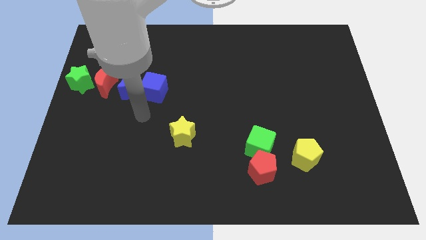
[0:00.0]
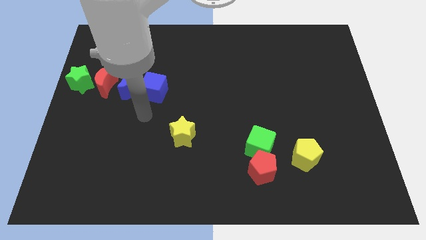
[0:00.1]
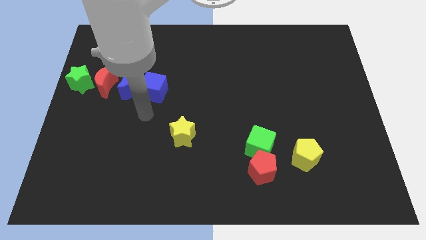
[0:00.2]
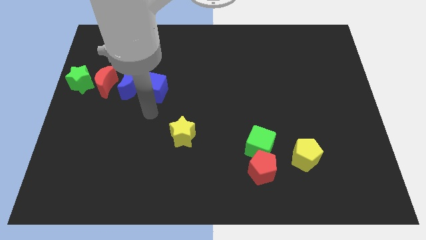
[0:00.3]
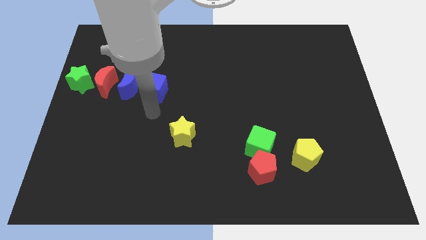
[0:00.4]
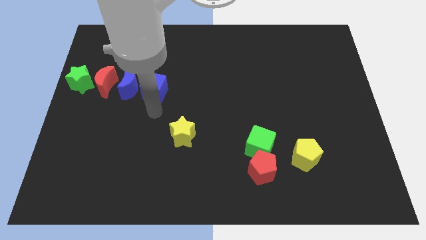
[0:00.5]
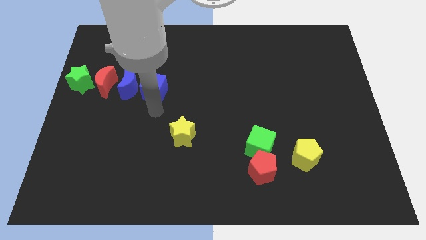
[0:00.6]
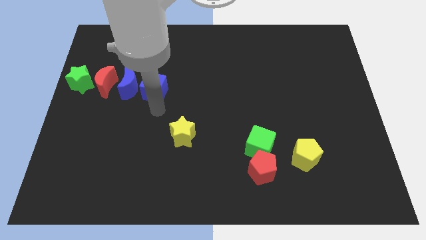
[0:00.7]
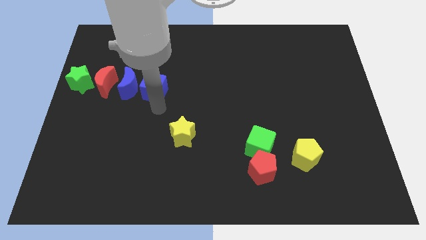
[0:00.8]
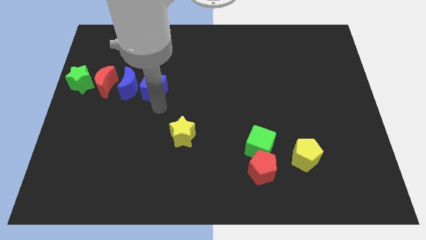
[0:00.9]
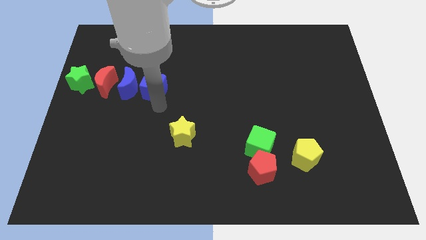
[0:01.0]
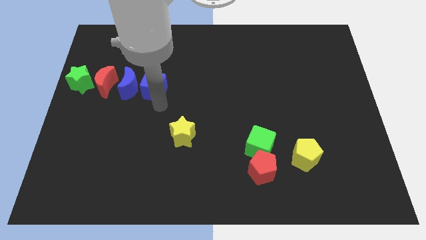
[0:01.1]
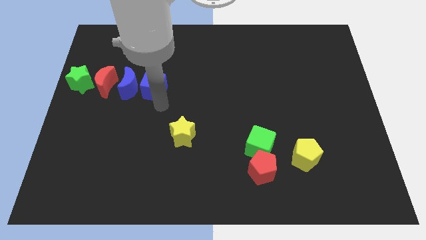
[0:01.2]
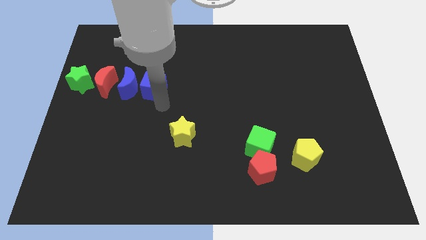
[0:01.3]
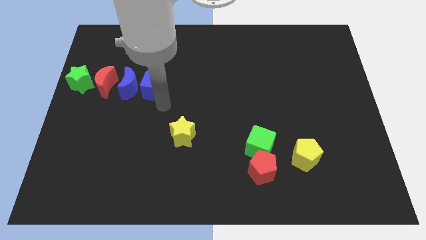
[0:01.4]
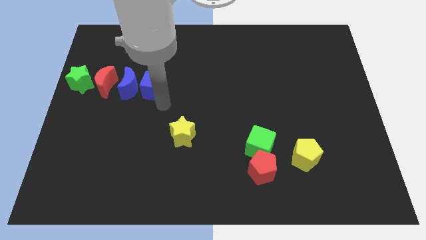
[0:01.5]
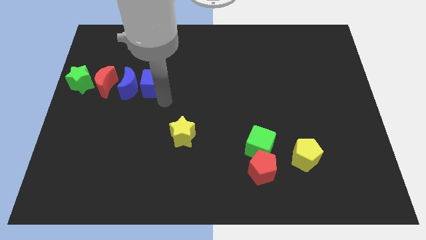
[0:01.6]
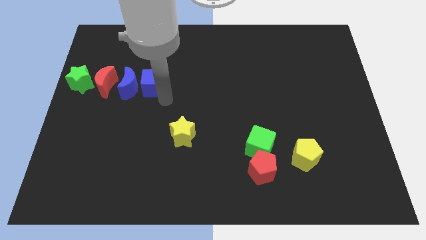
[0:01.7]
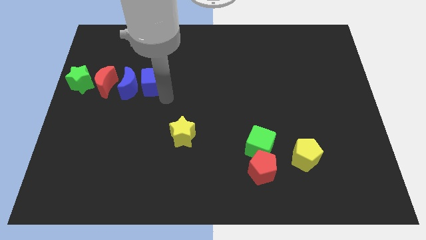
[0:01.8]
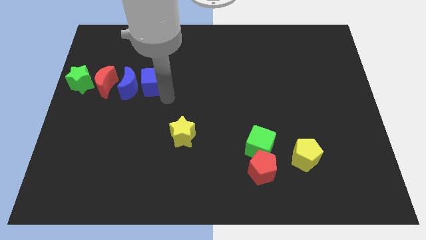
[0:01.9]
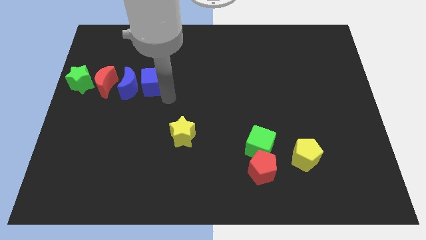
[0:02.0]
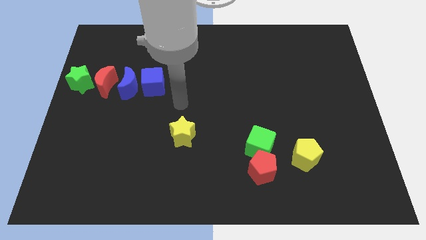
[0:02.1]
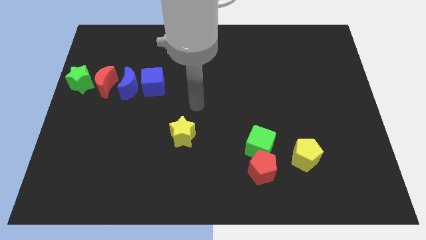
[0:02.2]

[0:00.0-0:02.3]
push the blue moon upwards slightly

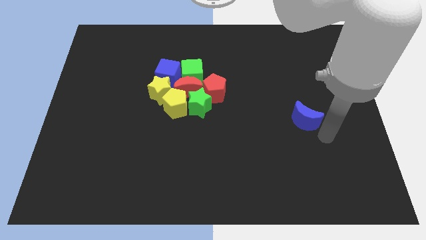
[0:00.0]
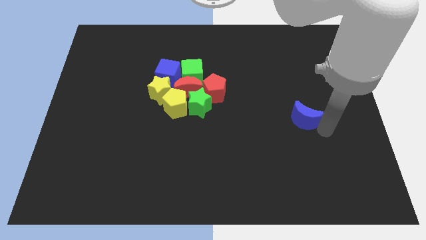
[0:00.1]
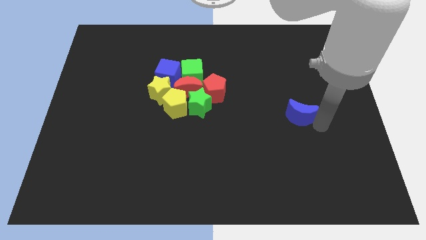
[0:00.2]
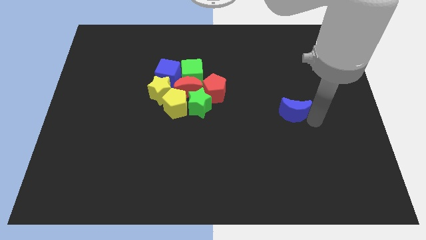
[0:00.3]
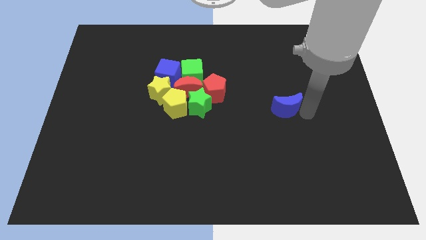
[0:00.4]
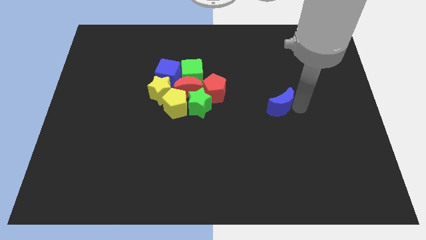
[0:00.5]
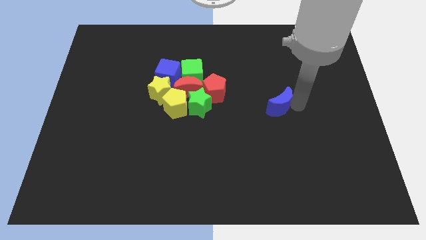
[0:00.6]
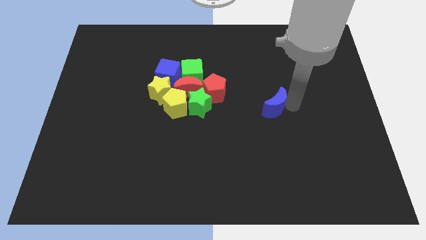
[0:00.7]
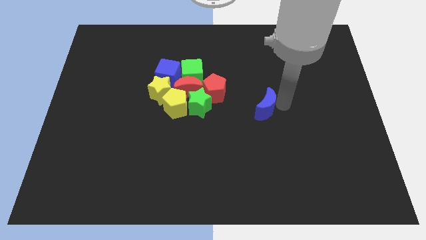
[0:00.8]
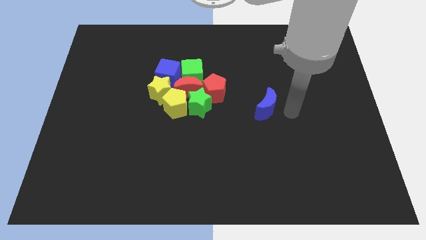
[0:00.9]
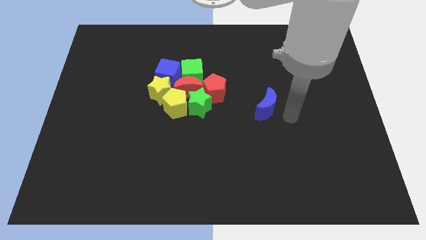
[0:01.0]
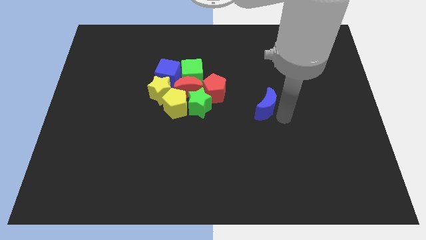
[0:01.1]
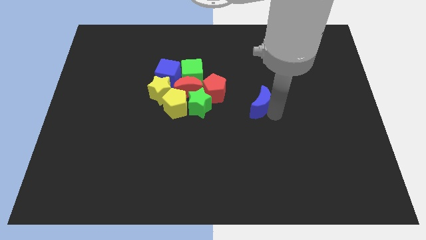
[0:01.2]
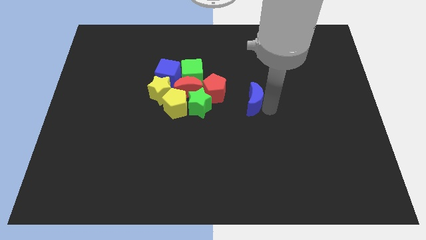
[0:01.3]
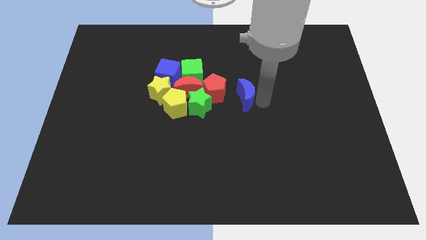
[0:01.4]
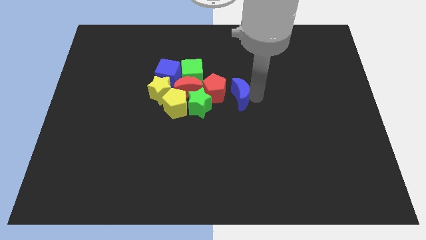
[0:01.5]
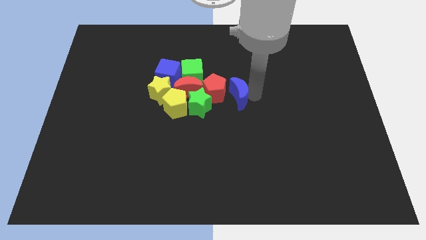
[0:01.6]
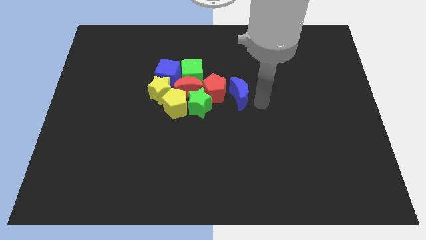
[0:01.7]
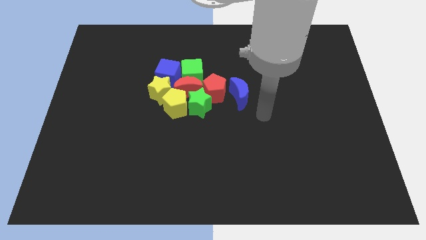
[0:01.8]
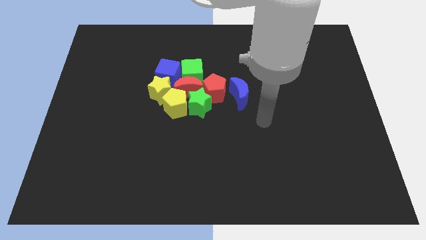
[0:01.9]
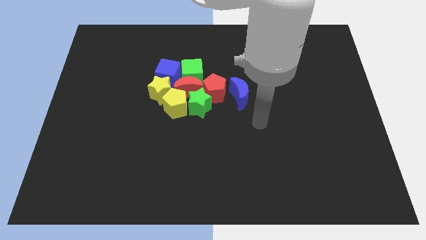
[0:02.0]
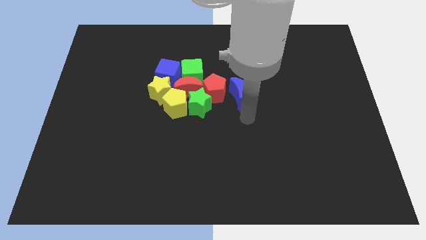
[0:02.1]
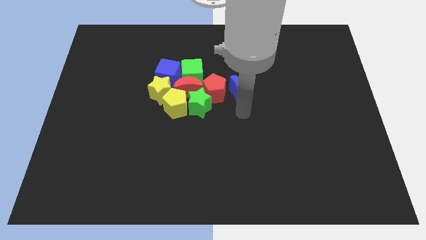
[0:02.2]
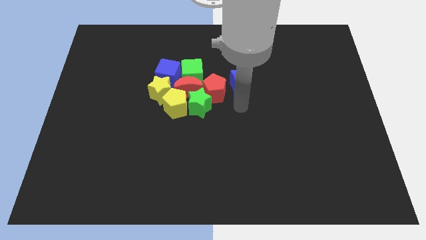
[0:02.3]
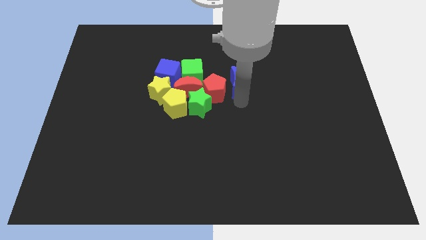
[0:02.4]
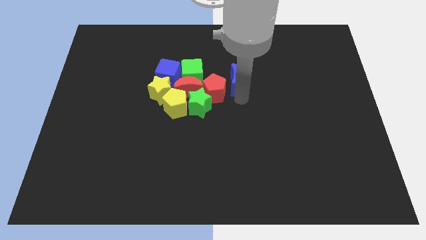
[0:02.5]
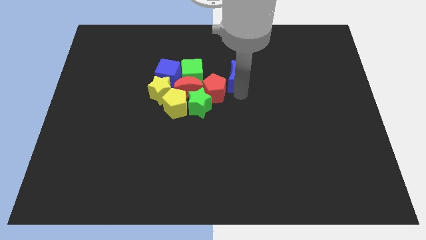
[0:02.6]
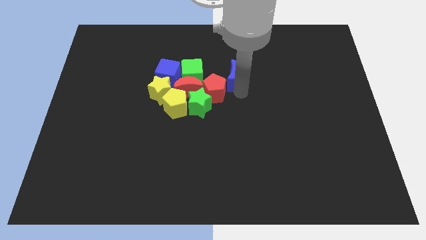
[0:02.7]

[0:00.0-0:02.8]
move the blue crescent to the top right of the red pentagon

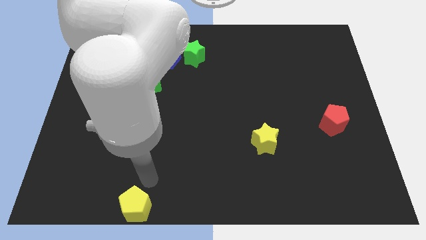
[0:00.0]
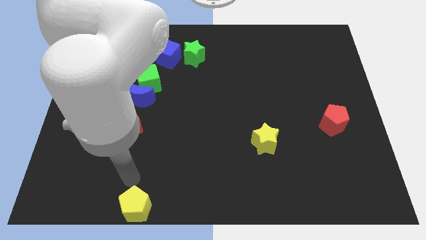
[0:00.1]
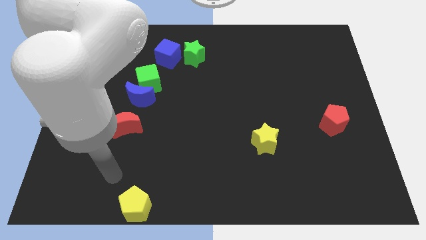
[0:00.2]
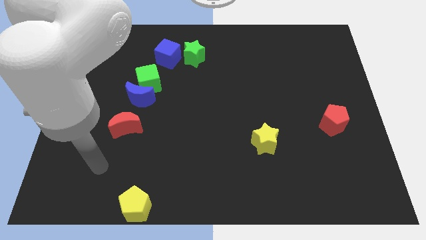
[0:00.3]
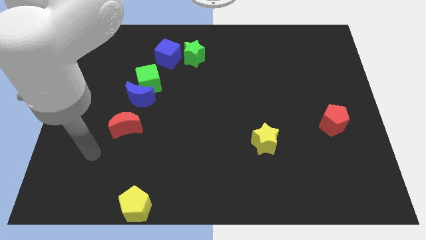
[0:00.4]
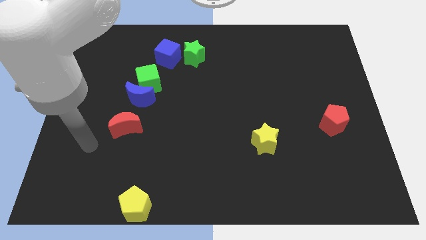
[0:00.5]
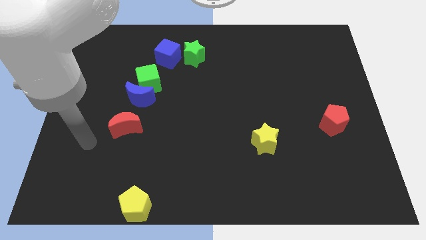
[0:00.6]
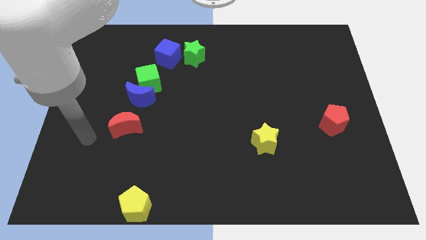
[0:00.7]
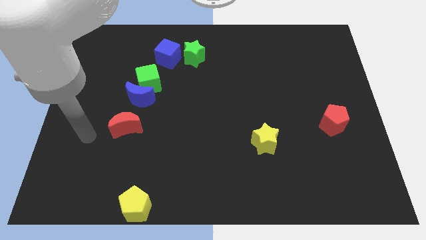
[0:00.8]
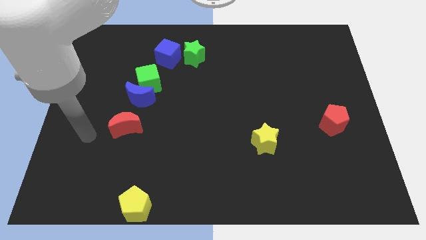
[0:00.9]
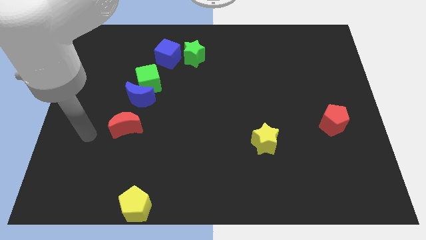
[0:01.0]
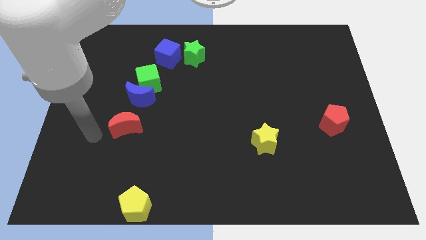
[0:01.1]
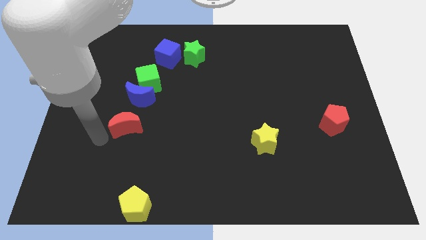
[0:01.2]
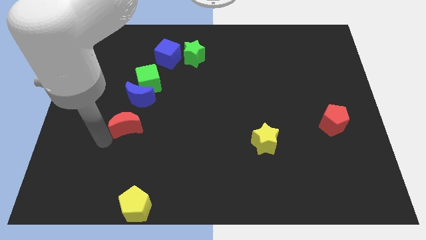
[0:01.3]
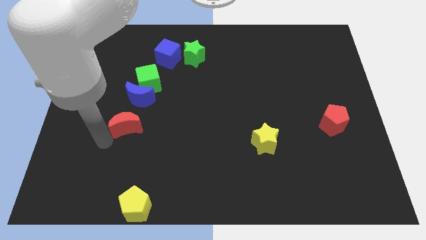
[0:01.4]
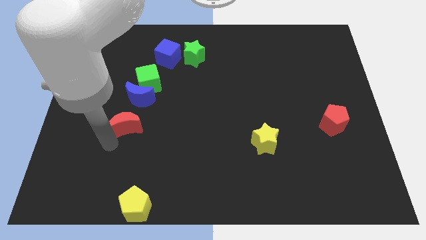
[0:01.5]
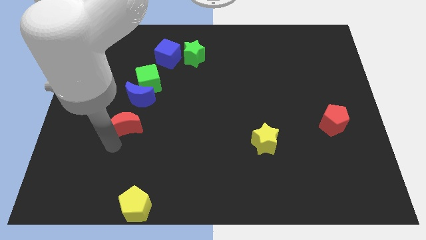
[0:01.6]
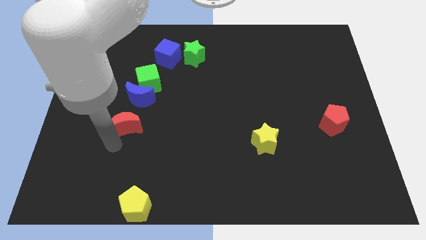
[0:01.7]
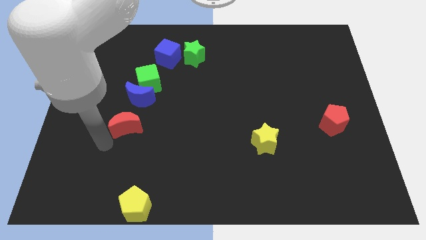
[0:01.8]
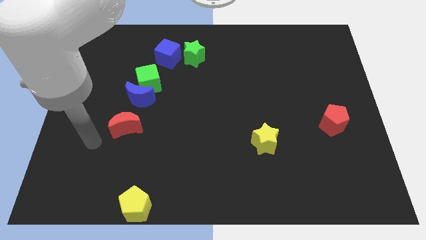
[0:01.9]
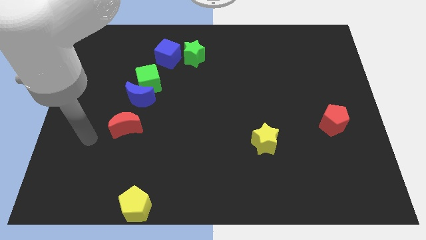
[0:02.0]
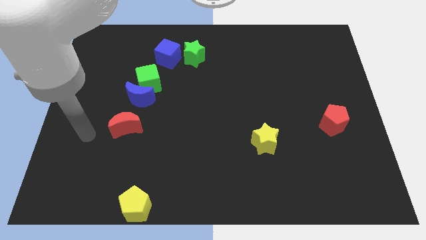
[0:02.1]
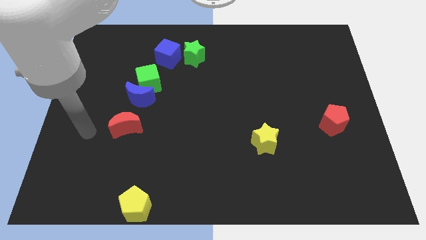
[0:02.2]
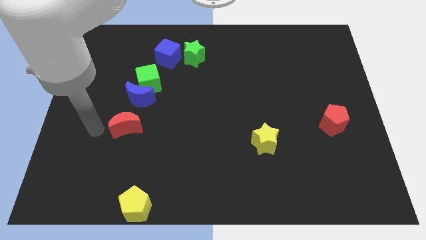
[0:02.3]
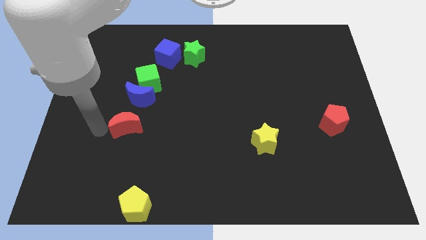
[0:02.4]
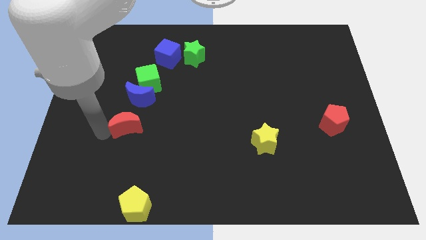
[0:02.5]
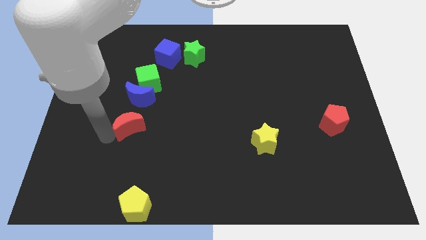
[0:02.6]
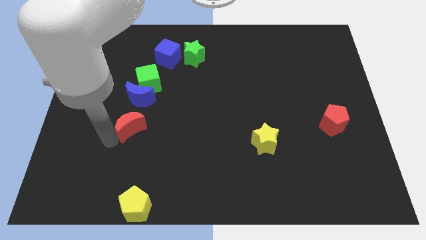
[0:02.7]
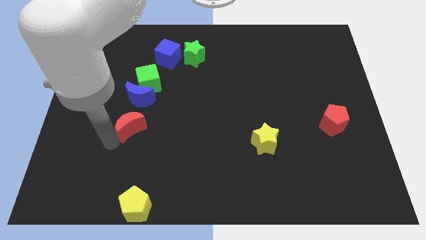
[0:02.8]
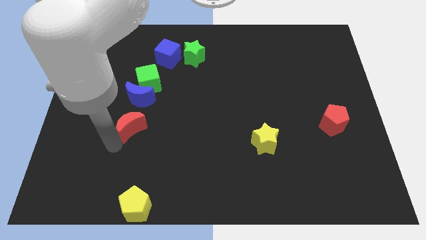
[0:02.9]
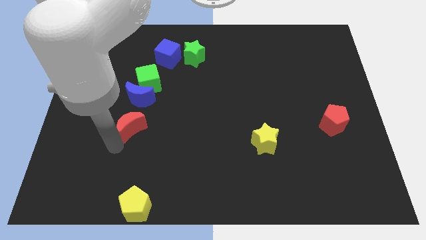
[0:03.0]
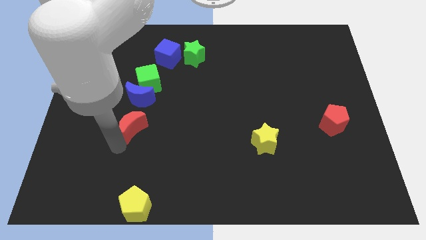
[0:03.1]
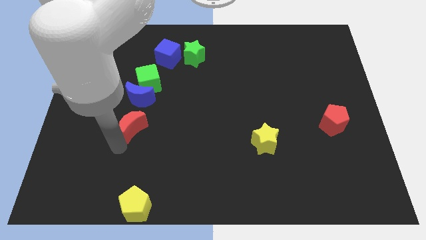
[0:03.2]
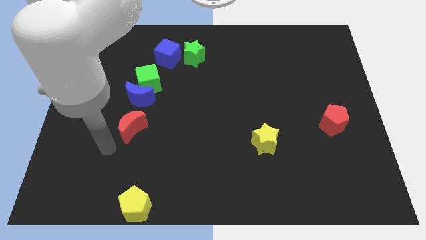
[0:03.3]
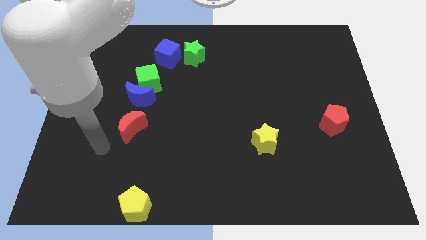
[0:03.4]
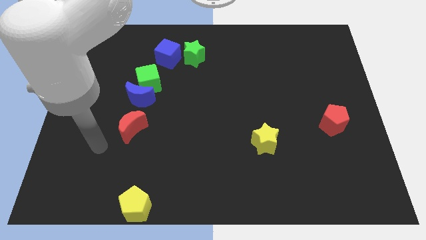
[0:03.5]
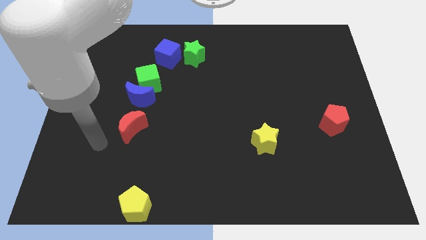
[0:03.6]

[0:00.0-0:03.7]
move the red crescent to the bottom of the blue crescent
